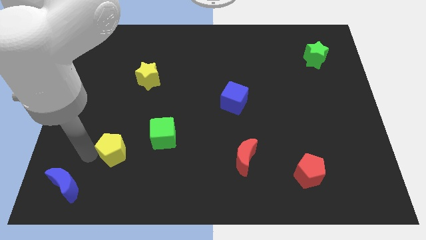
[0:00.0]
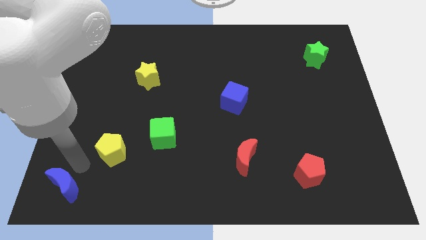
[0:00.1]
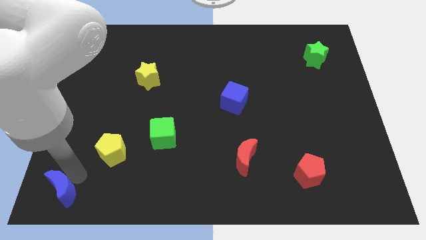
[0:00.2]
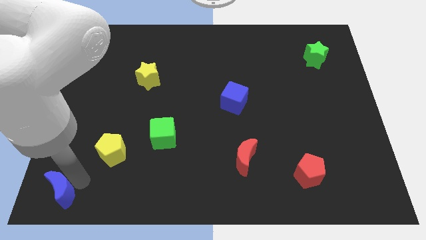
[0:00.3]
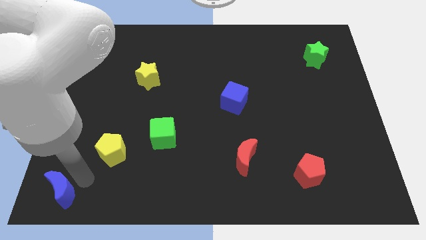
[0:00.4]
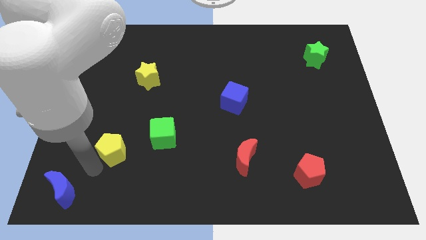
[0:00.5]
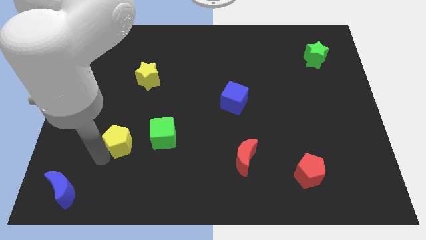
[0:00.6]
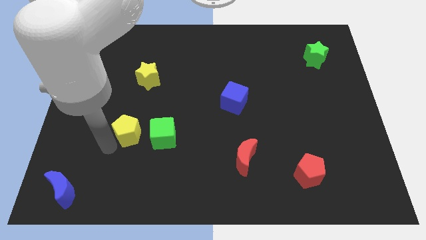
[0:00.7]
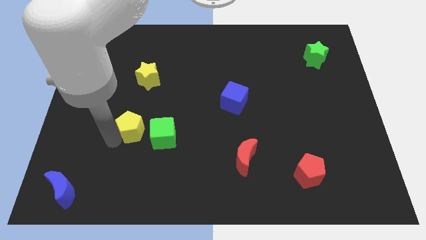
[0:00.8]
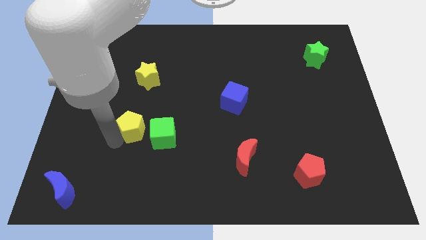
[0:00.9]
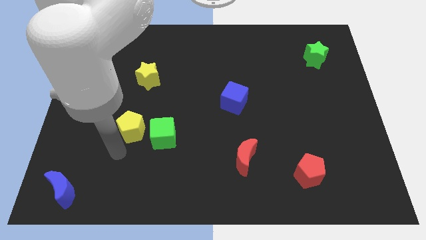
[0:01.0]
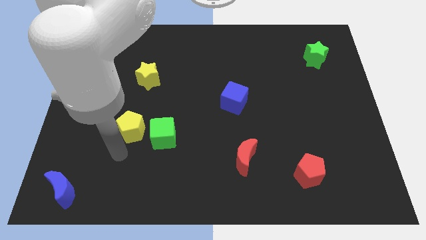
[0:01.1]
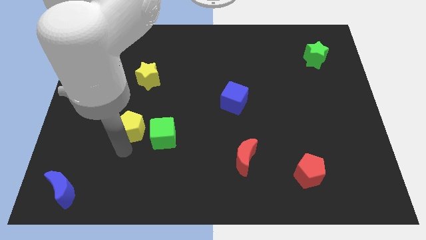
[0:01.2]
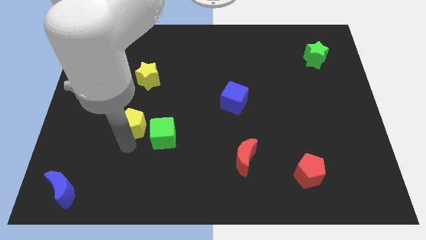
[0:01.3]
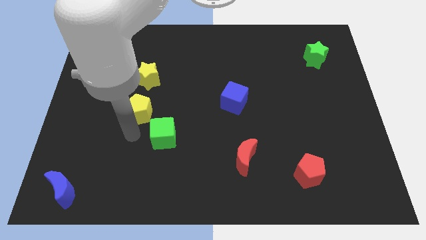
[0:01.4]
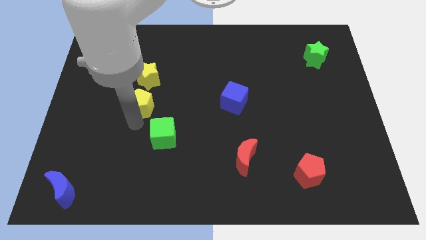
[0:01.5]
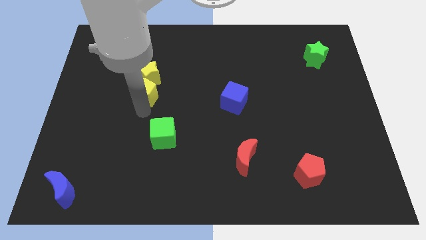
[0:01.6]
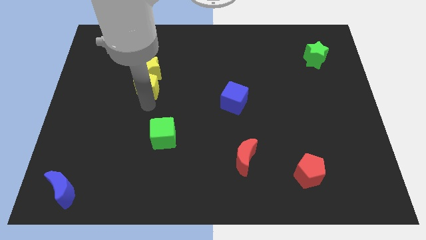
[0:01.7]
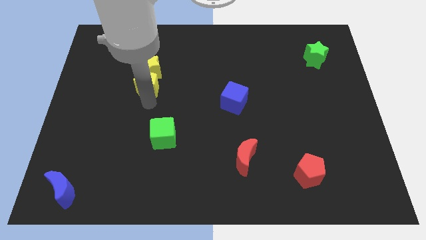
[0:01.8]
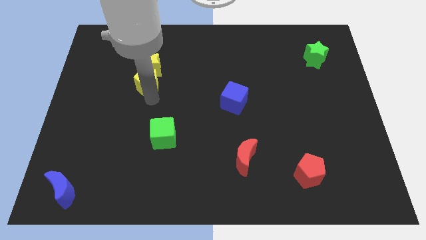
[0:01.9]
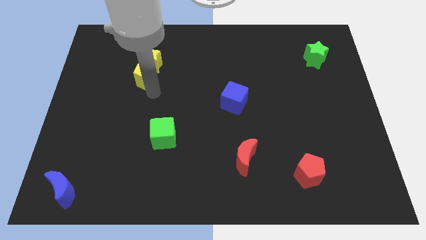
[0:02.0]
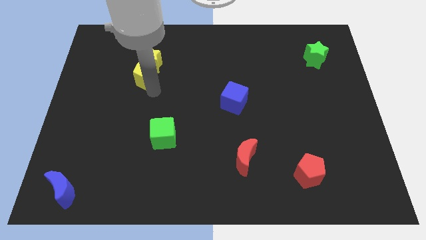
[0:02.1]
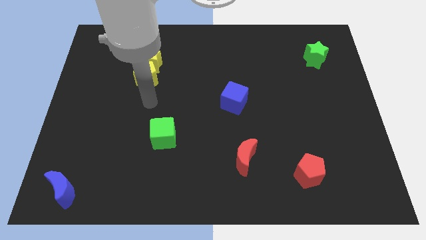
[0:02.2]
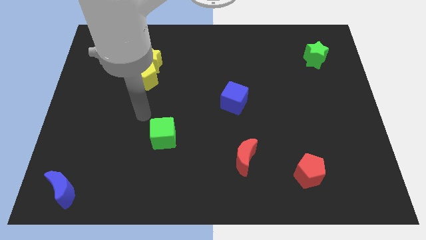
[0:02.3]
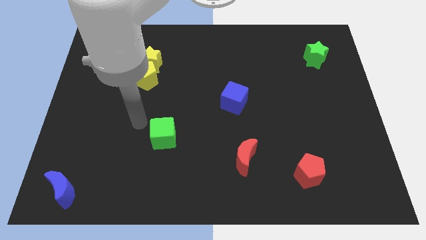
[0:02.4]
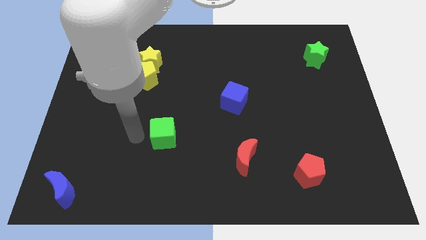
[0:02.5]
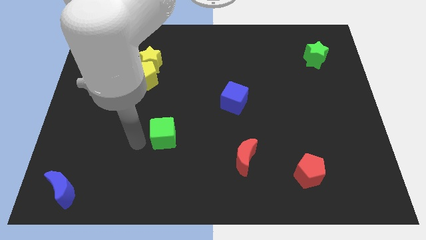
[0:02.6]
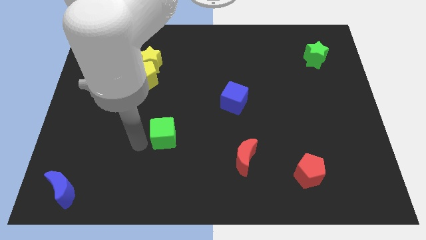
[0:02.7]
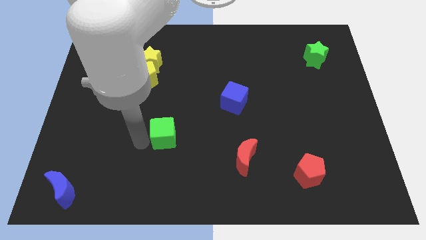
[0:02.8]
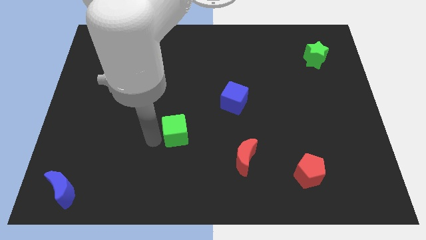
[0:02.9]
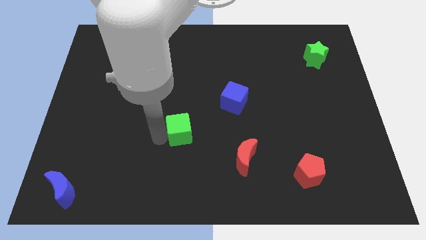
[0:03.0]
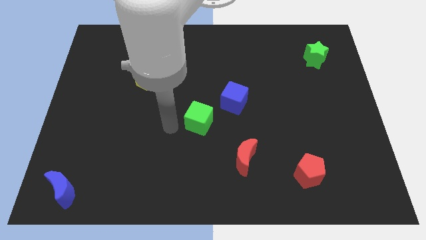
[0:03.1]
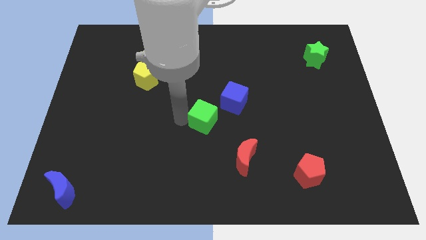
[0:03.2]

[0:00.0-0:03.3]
push the yellow pentagon to the yellow star

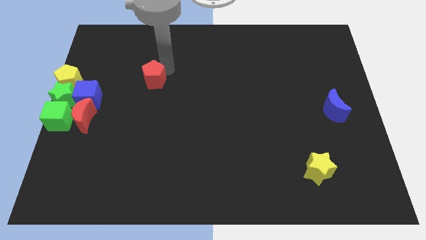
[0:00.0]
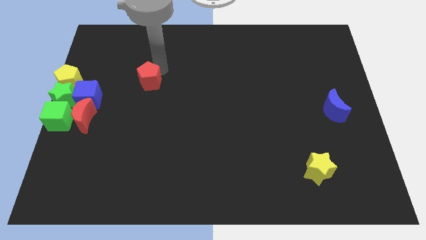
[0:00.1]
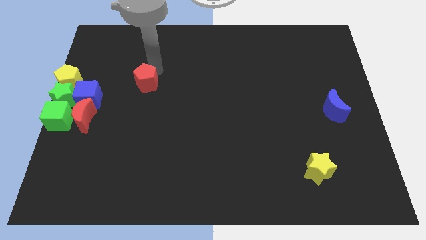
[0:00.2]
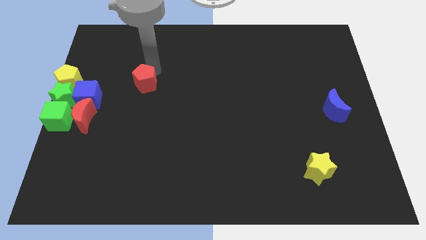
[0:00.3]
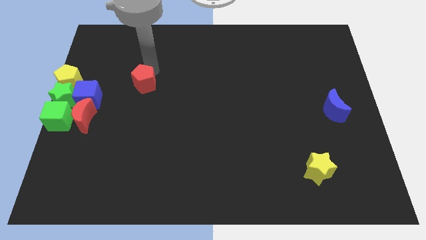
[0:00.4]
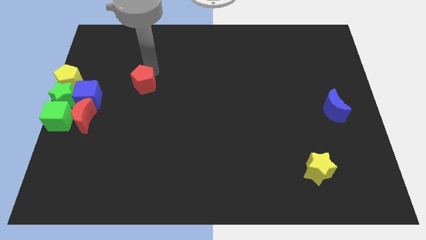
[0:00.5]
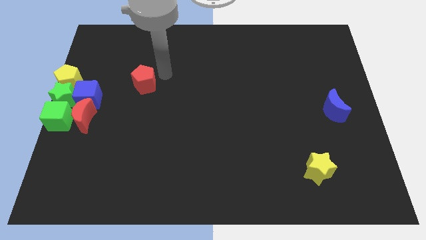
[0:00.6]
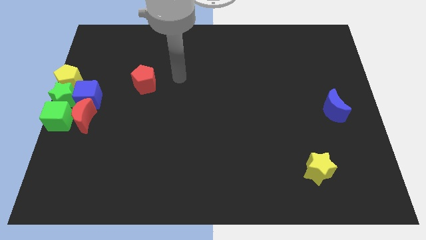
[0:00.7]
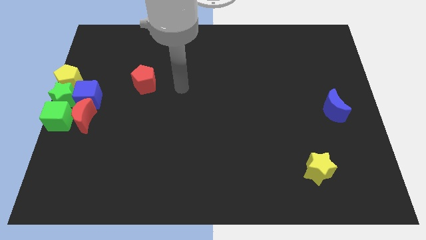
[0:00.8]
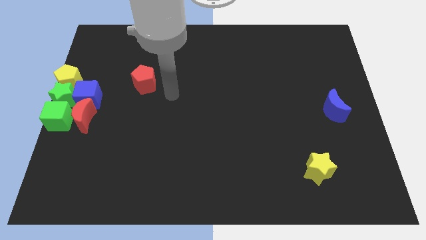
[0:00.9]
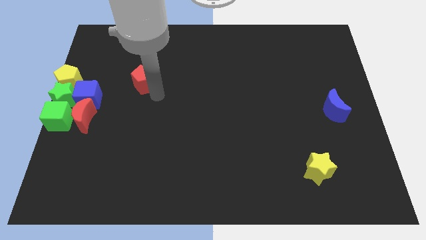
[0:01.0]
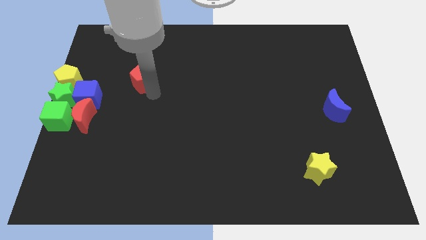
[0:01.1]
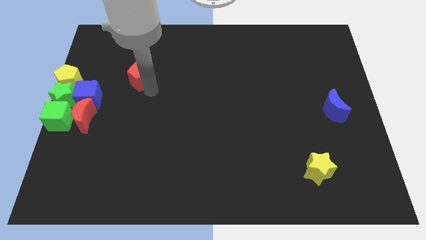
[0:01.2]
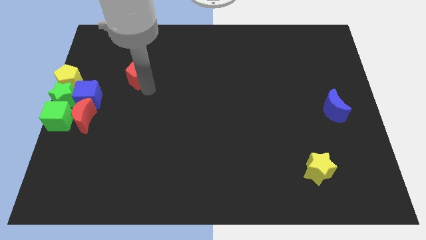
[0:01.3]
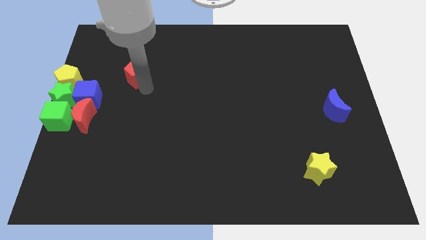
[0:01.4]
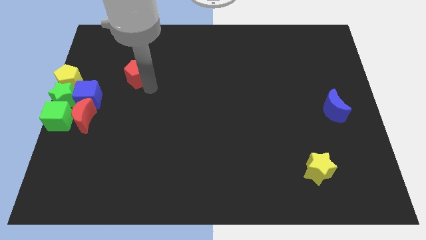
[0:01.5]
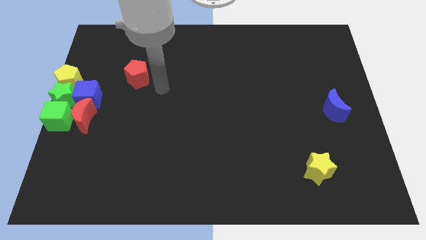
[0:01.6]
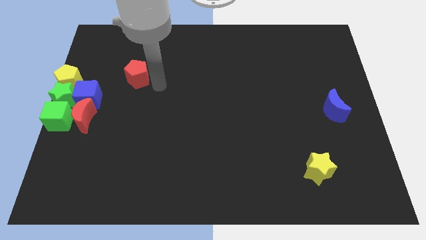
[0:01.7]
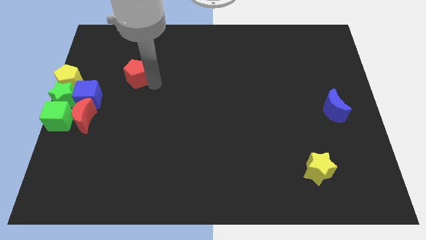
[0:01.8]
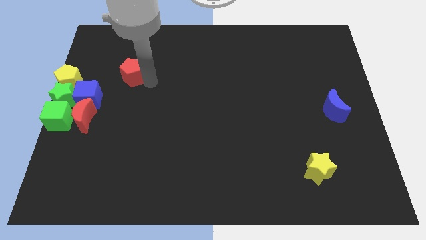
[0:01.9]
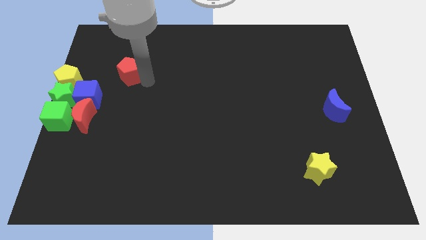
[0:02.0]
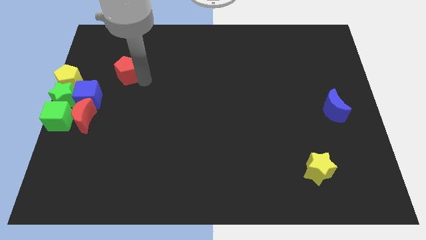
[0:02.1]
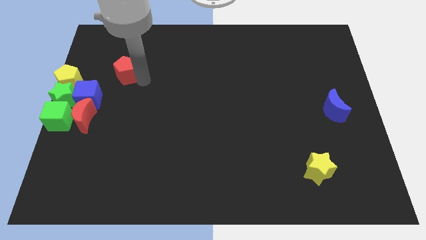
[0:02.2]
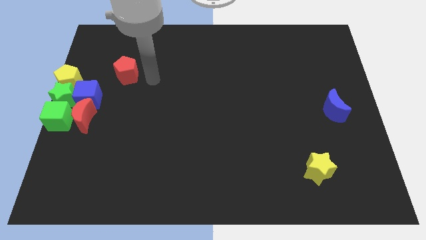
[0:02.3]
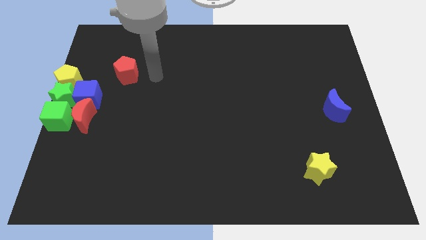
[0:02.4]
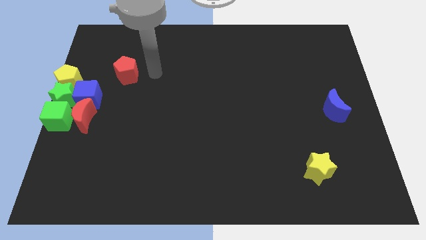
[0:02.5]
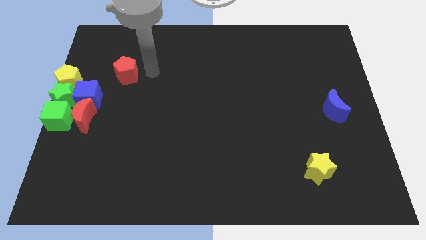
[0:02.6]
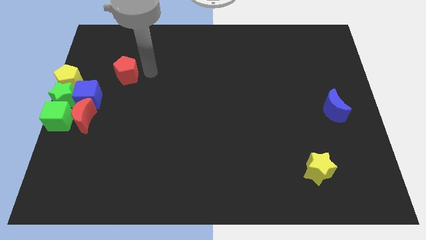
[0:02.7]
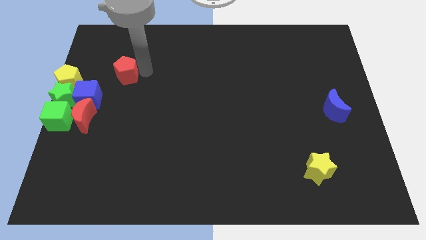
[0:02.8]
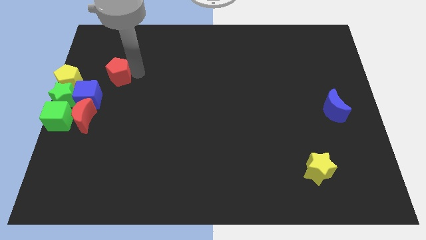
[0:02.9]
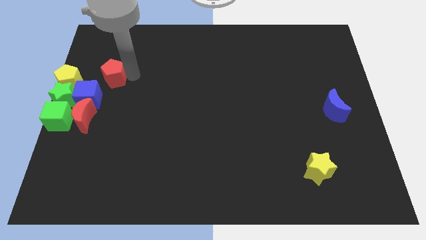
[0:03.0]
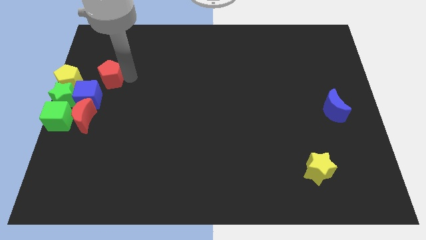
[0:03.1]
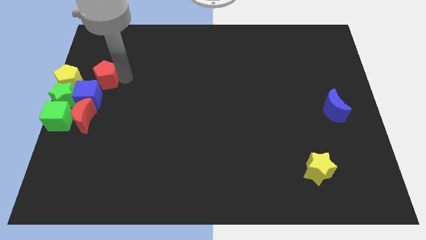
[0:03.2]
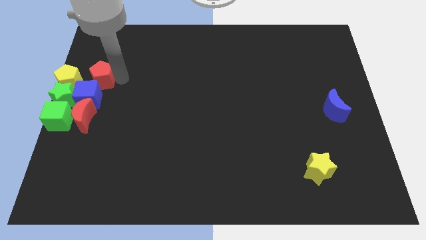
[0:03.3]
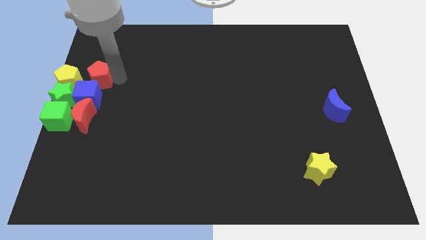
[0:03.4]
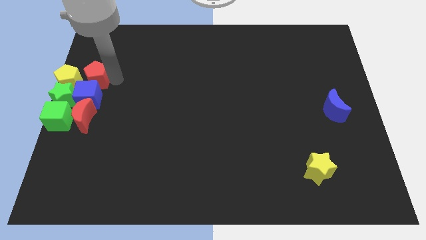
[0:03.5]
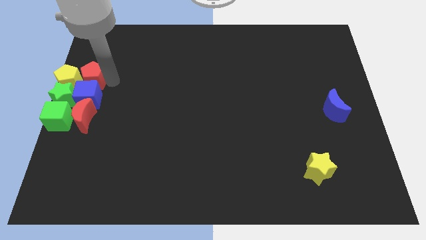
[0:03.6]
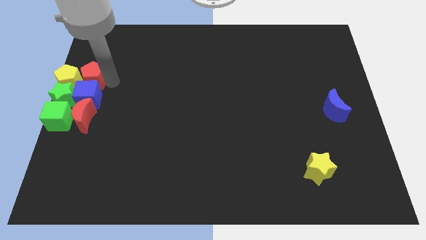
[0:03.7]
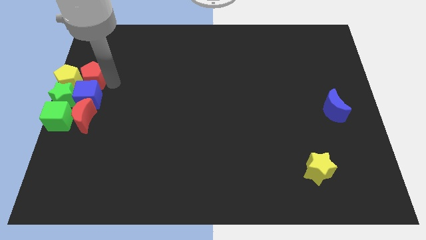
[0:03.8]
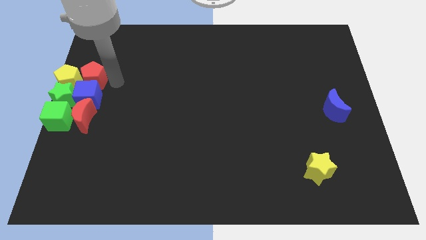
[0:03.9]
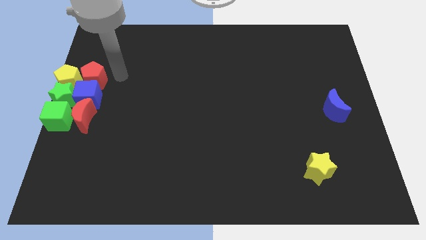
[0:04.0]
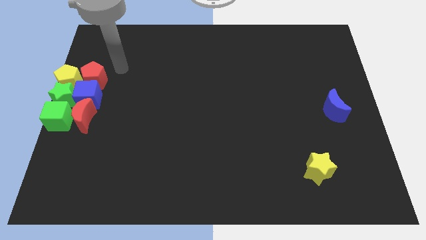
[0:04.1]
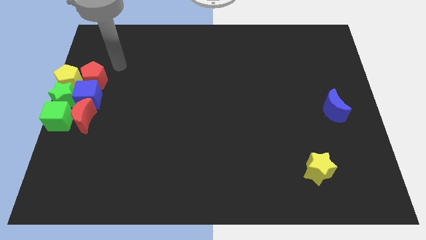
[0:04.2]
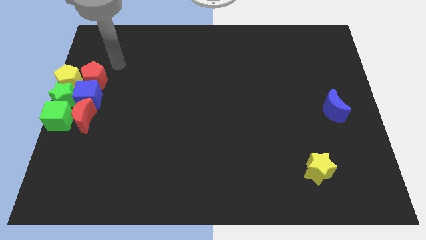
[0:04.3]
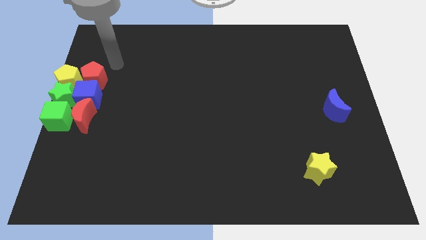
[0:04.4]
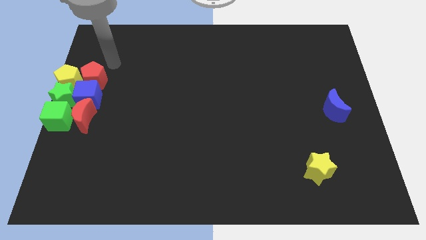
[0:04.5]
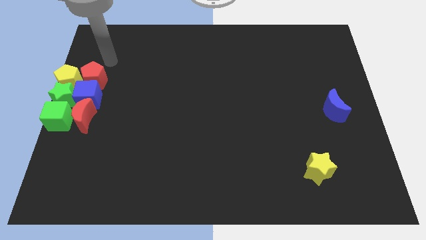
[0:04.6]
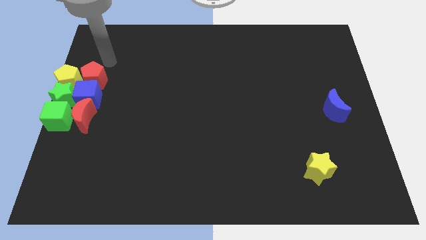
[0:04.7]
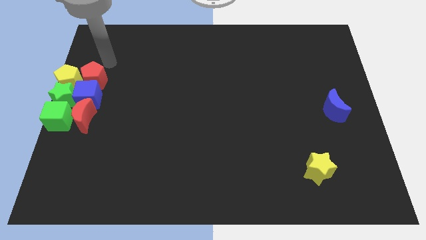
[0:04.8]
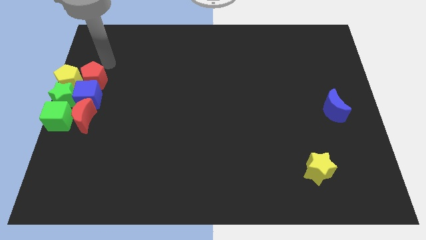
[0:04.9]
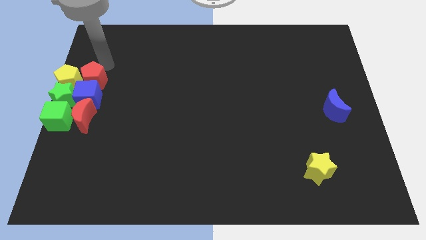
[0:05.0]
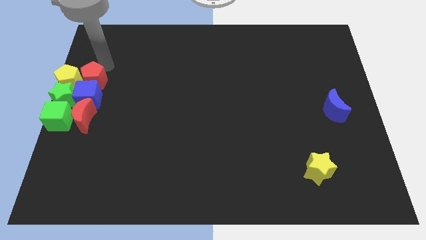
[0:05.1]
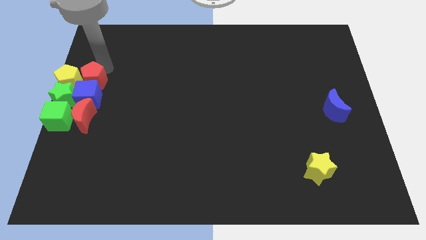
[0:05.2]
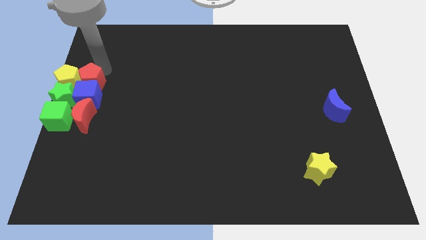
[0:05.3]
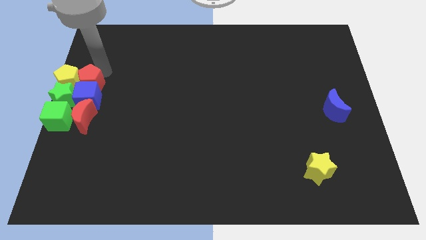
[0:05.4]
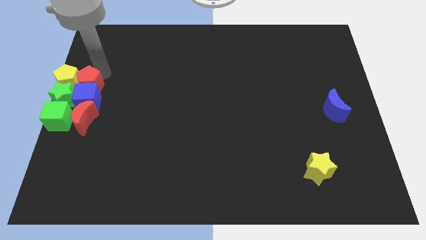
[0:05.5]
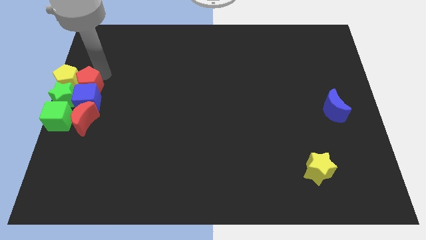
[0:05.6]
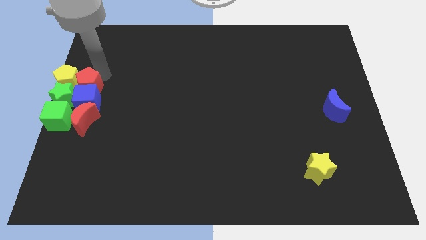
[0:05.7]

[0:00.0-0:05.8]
slide the red pentagon into the top side of the blue cube
